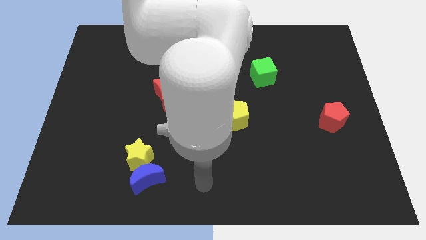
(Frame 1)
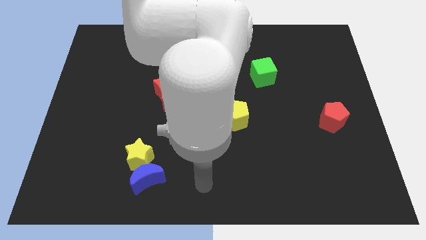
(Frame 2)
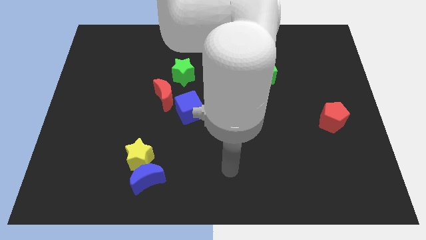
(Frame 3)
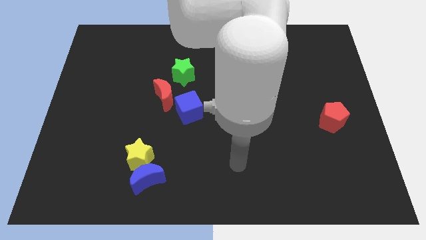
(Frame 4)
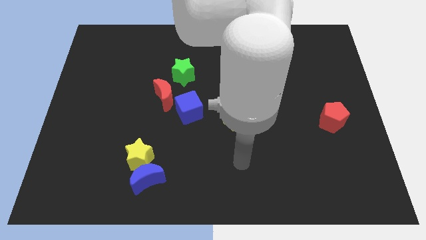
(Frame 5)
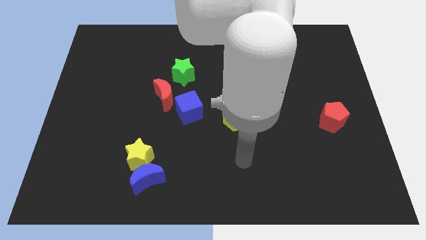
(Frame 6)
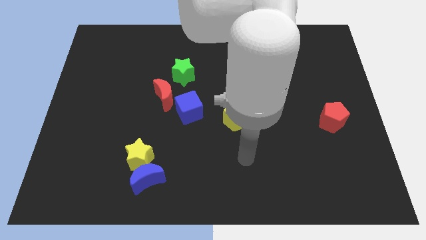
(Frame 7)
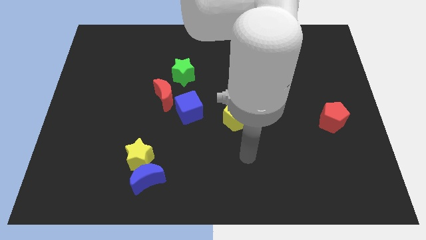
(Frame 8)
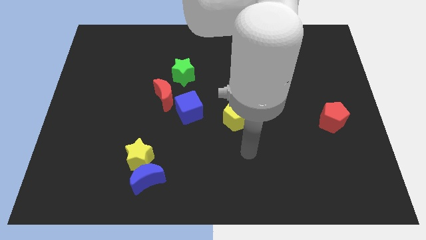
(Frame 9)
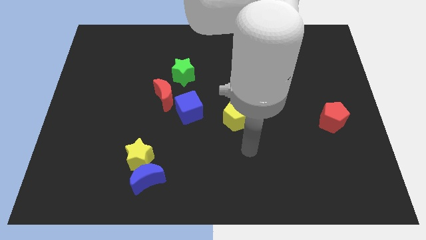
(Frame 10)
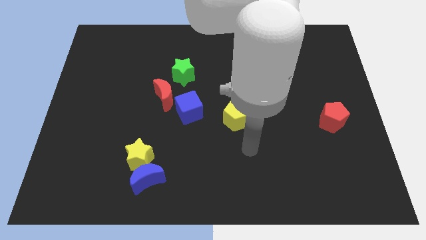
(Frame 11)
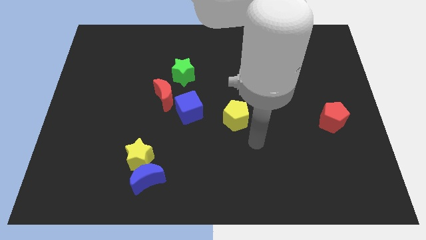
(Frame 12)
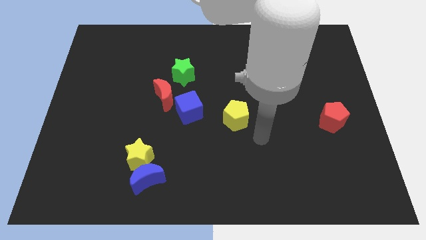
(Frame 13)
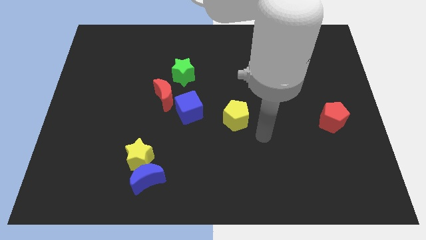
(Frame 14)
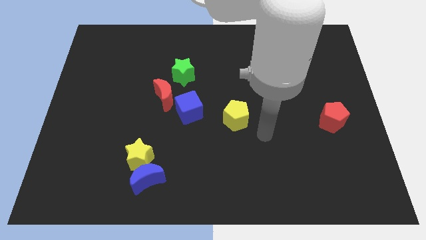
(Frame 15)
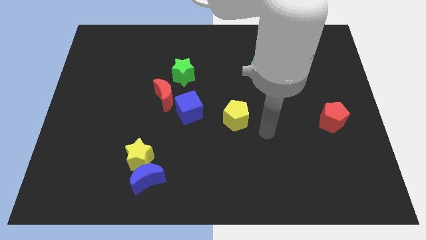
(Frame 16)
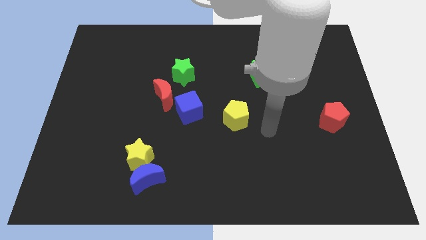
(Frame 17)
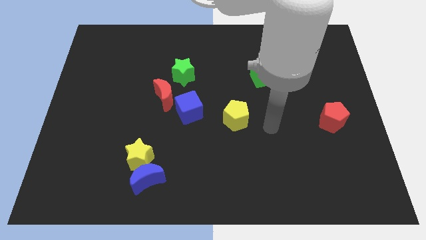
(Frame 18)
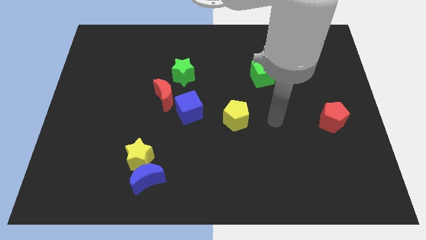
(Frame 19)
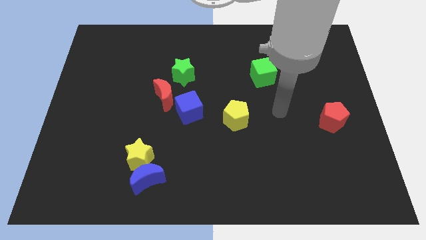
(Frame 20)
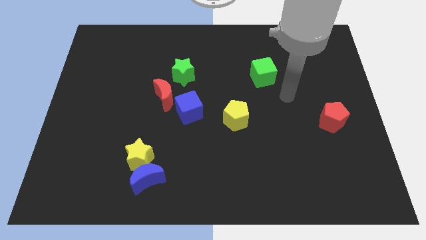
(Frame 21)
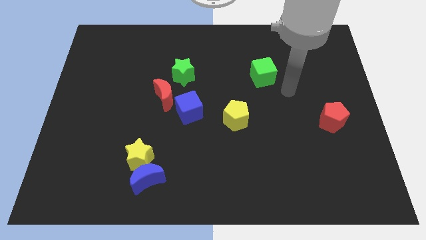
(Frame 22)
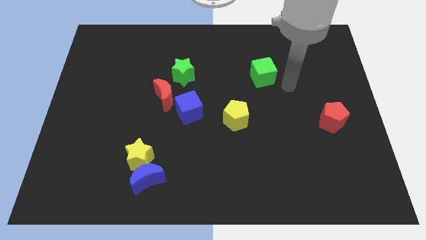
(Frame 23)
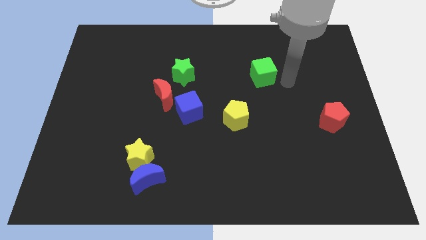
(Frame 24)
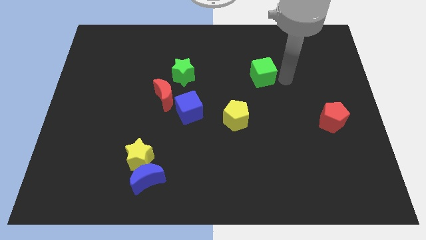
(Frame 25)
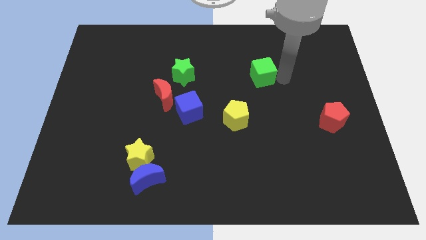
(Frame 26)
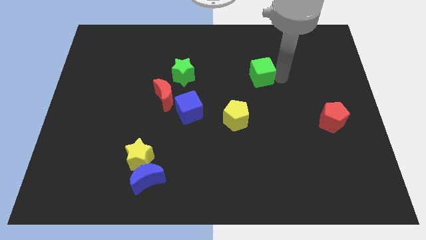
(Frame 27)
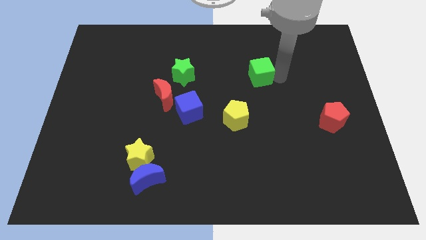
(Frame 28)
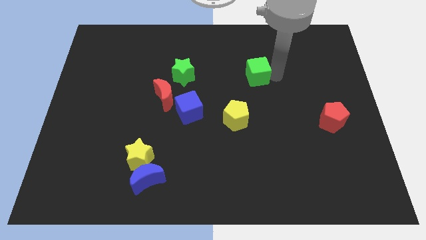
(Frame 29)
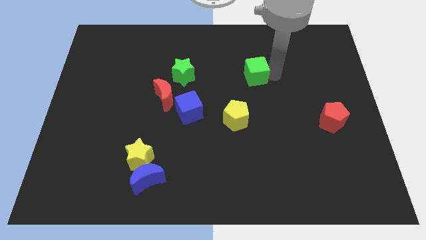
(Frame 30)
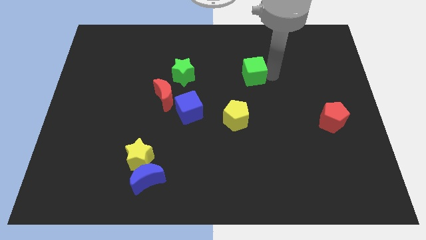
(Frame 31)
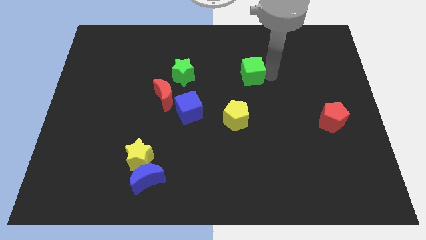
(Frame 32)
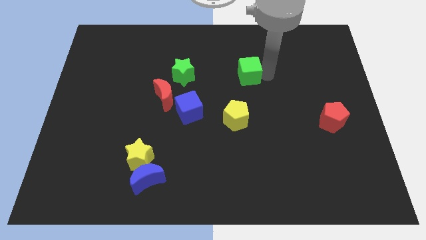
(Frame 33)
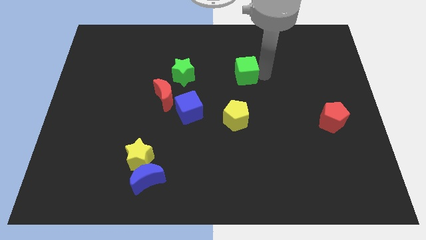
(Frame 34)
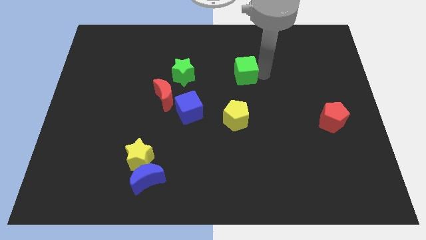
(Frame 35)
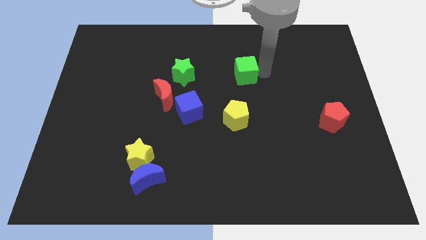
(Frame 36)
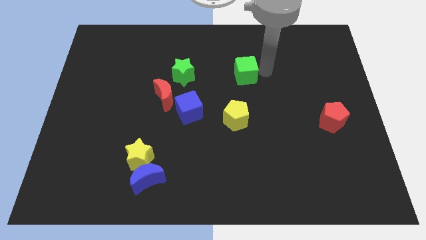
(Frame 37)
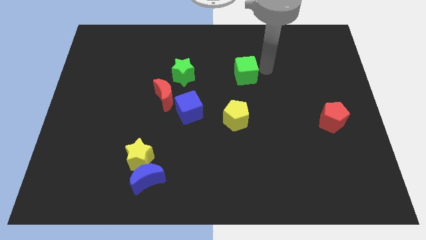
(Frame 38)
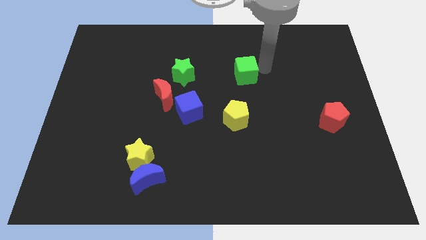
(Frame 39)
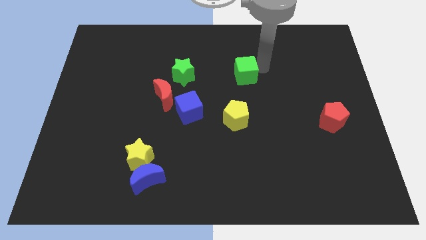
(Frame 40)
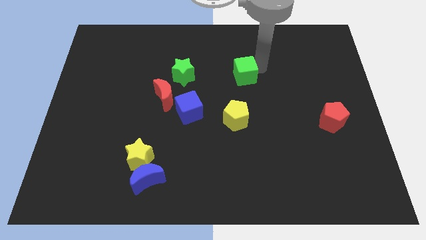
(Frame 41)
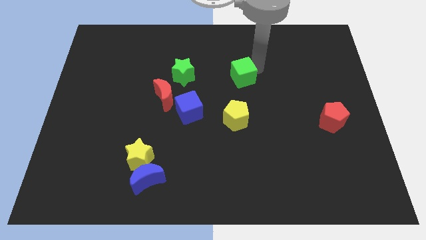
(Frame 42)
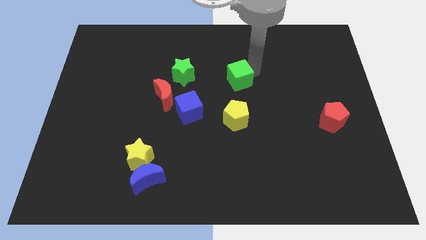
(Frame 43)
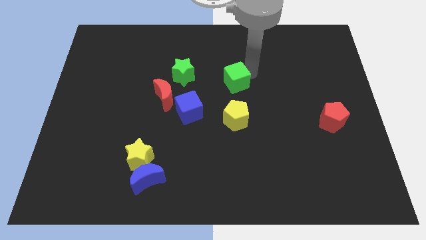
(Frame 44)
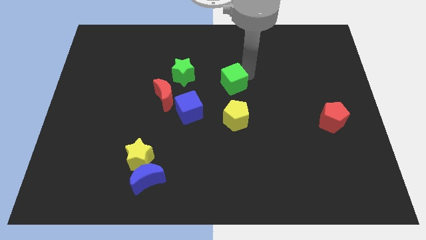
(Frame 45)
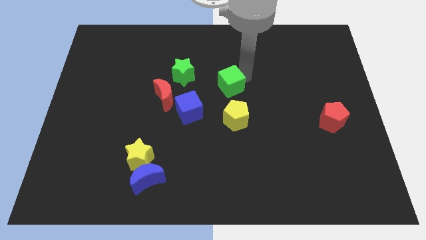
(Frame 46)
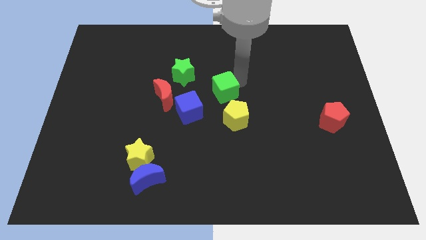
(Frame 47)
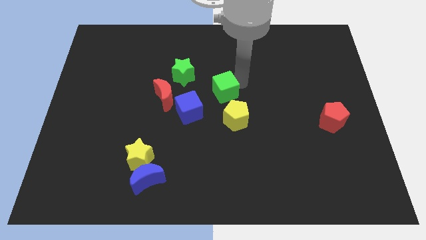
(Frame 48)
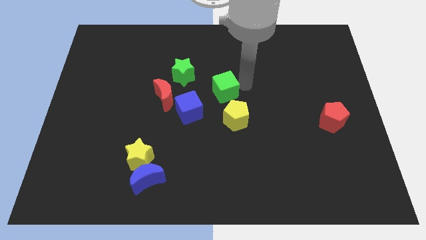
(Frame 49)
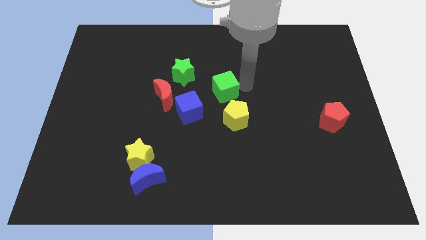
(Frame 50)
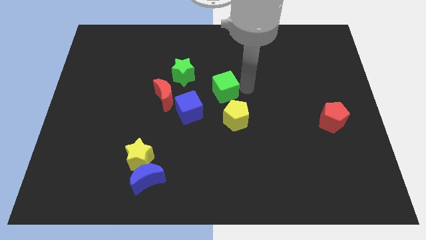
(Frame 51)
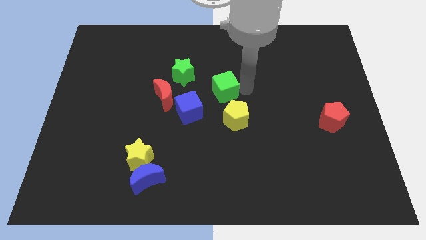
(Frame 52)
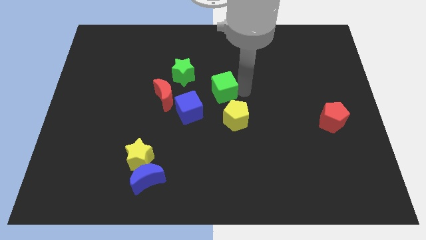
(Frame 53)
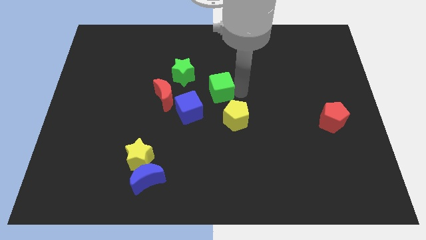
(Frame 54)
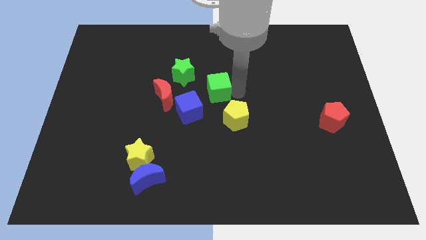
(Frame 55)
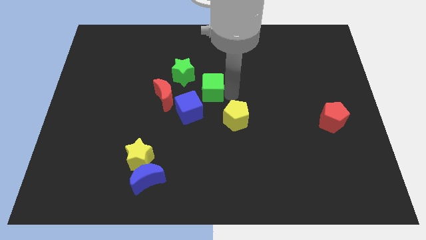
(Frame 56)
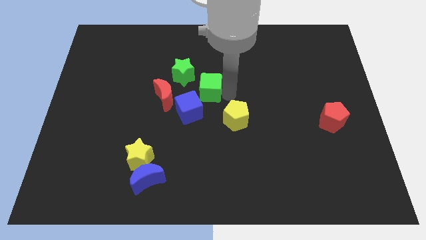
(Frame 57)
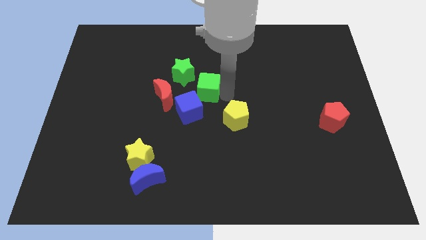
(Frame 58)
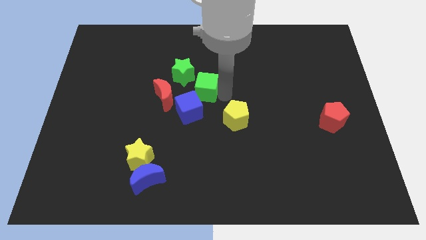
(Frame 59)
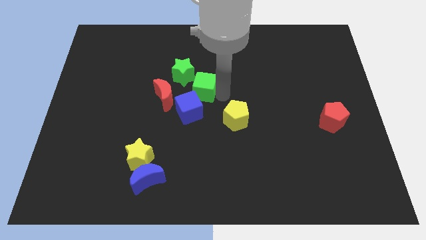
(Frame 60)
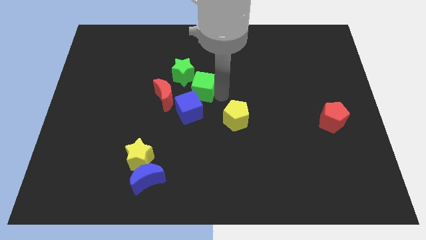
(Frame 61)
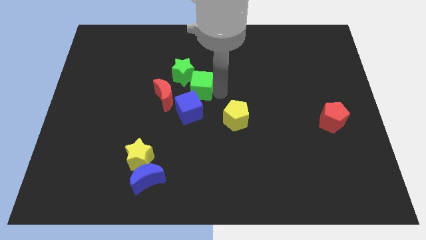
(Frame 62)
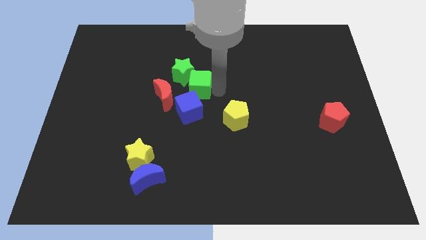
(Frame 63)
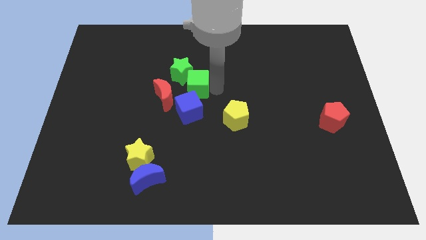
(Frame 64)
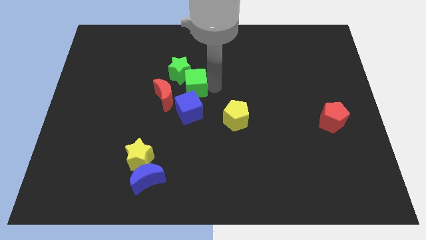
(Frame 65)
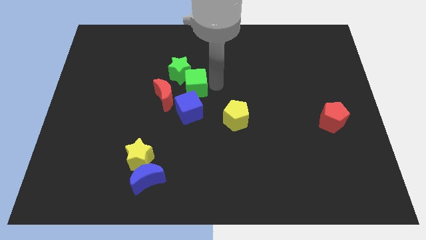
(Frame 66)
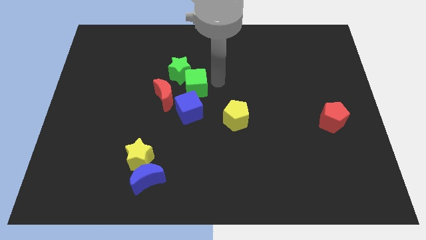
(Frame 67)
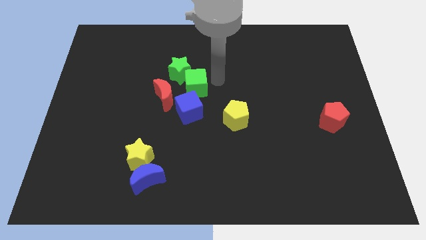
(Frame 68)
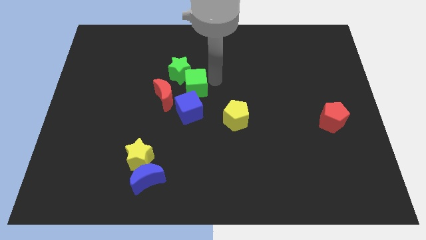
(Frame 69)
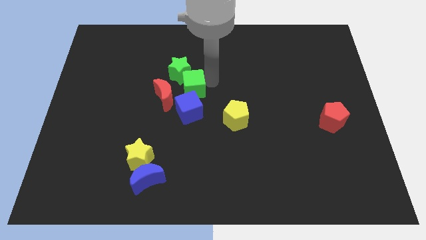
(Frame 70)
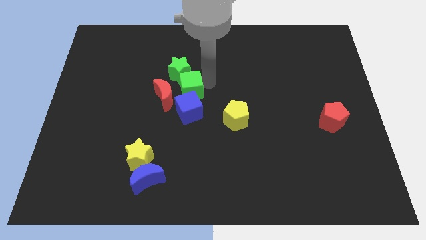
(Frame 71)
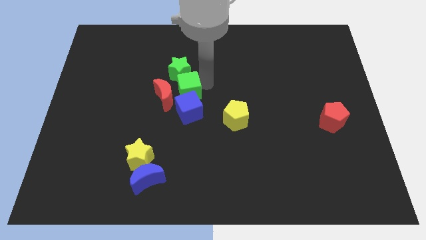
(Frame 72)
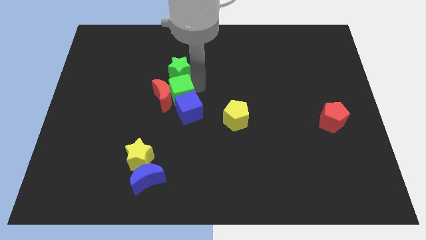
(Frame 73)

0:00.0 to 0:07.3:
put the green cube towards the red moon

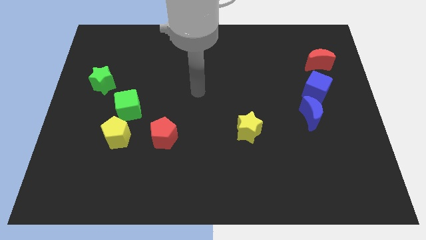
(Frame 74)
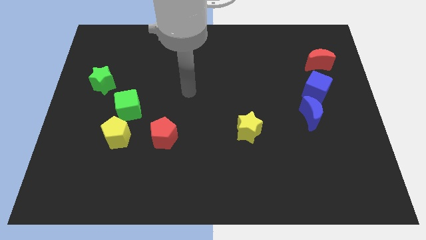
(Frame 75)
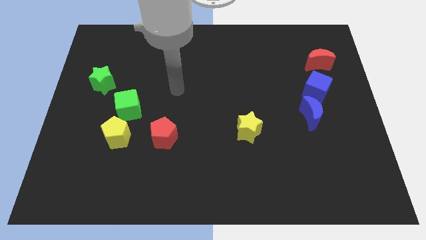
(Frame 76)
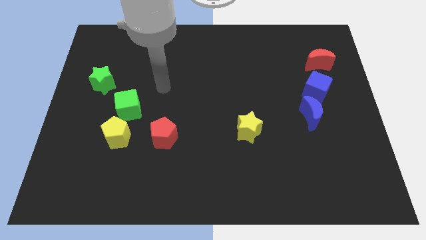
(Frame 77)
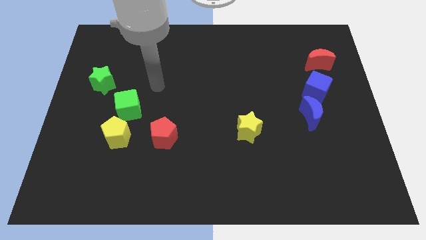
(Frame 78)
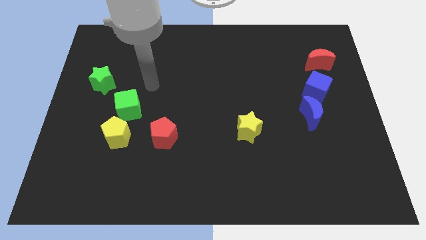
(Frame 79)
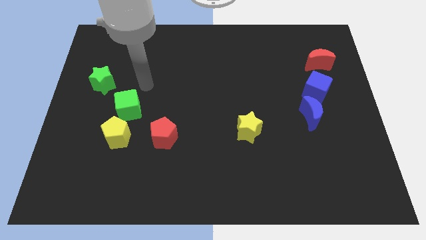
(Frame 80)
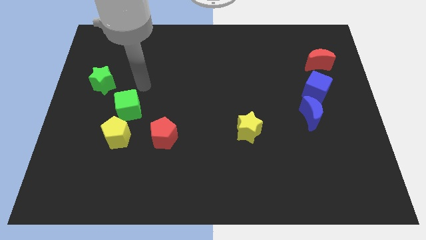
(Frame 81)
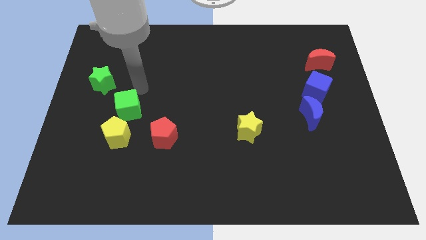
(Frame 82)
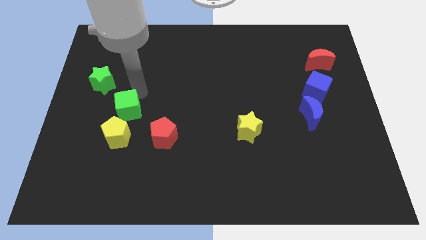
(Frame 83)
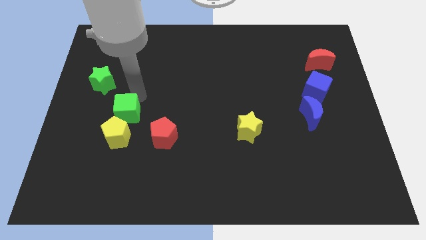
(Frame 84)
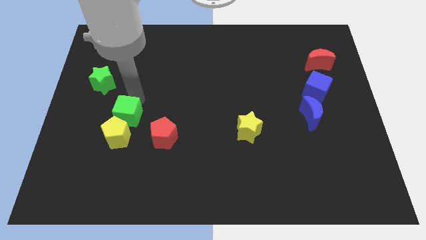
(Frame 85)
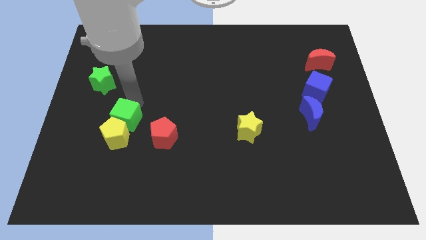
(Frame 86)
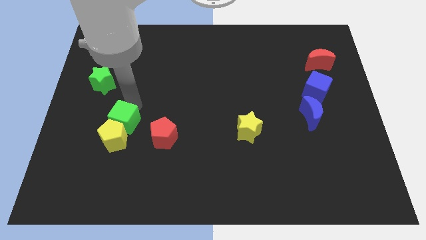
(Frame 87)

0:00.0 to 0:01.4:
put the green cube towards the yellow pentagon
